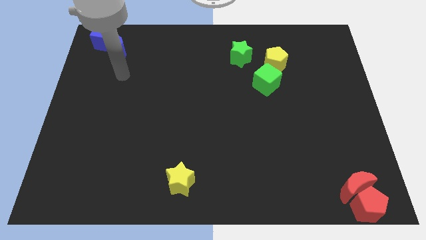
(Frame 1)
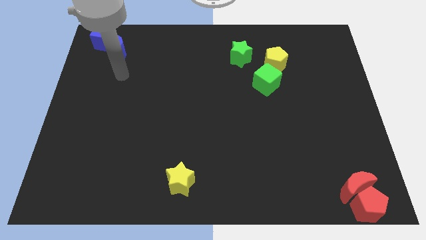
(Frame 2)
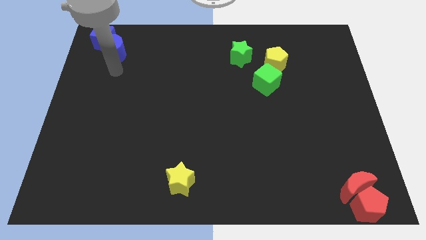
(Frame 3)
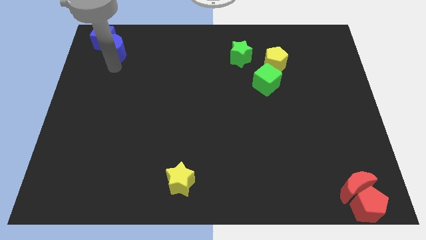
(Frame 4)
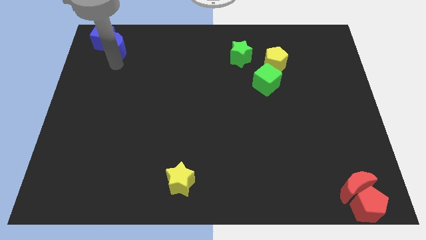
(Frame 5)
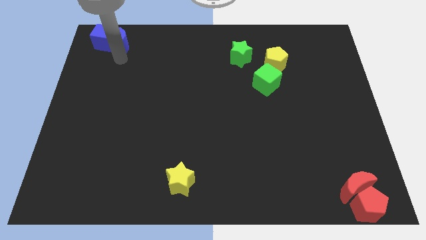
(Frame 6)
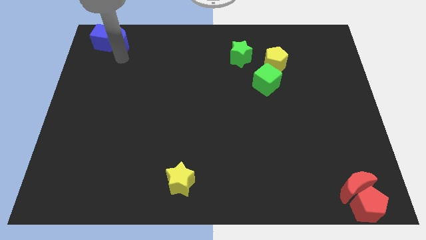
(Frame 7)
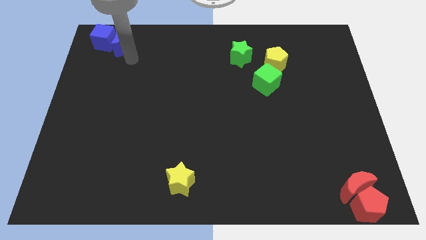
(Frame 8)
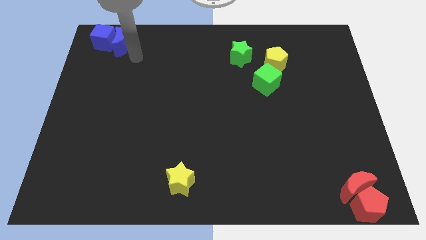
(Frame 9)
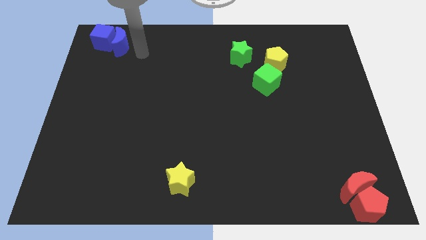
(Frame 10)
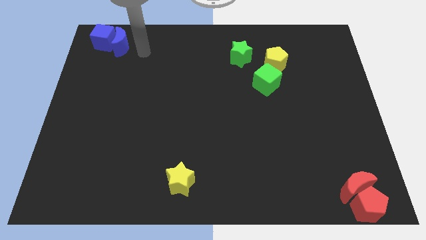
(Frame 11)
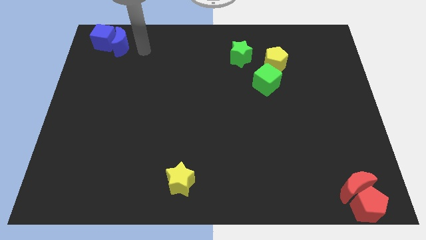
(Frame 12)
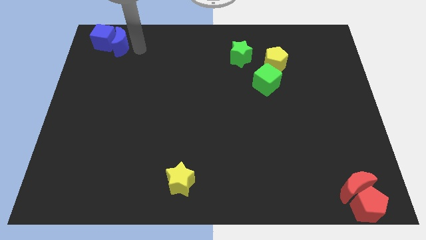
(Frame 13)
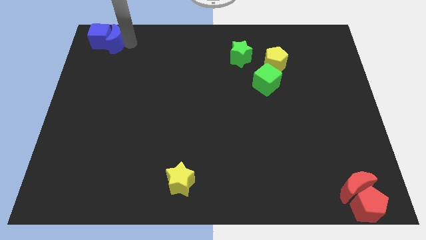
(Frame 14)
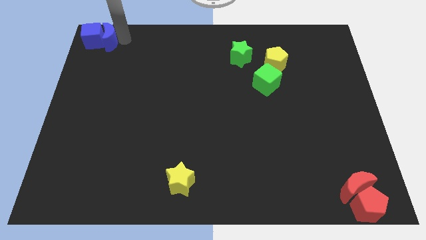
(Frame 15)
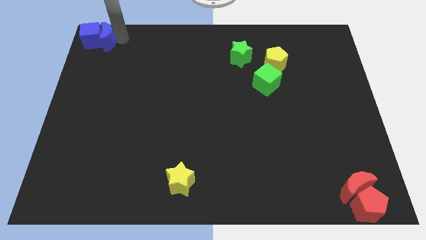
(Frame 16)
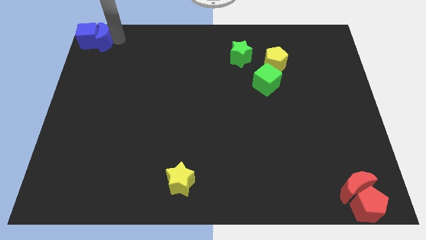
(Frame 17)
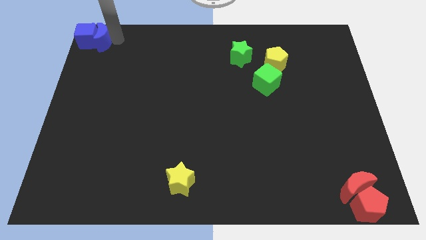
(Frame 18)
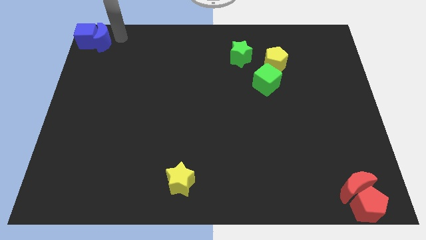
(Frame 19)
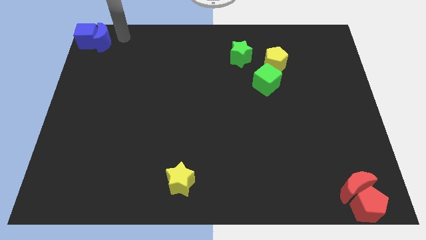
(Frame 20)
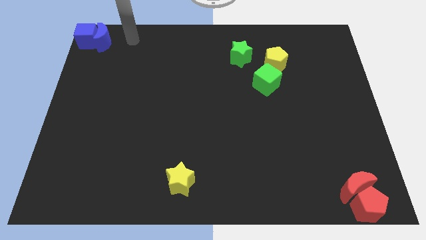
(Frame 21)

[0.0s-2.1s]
move the blue blocks to the top left of the board

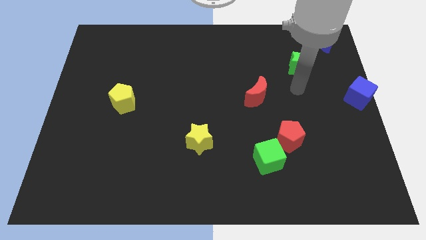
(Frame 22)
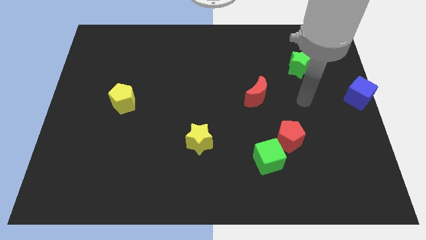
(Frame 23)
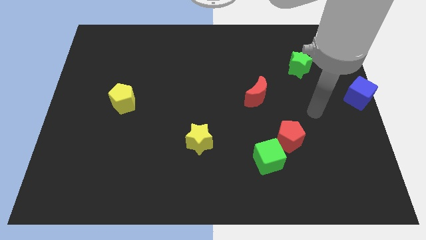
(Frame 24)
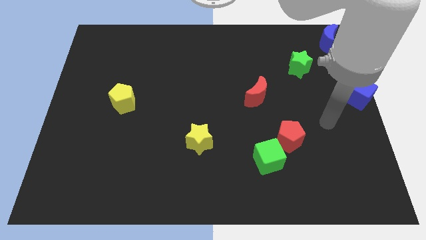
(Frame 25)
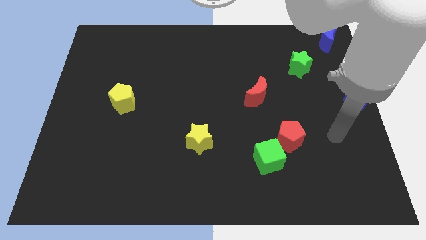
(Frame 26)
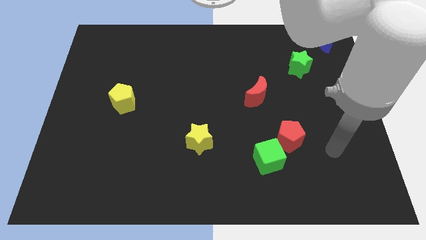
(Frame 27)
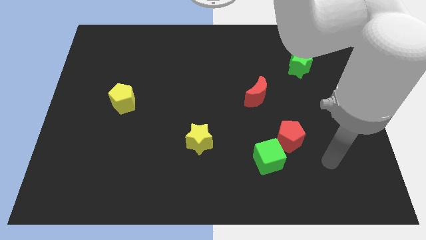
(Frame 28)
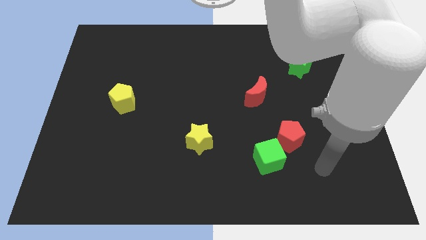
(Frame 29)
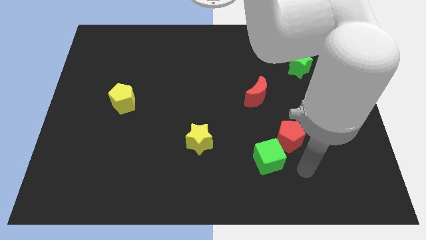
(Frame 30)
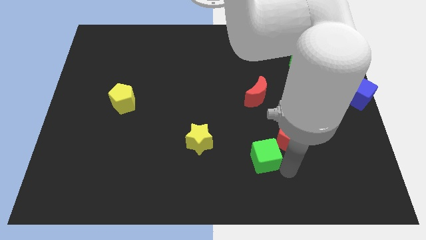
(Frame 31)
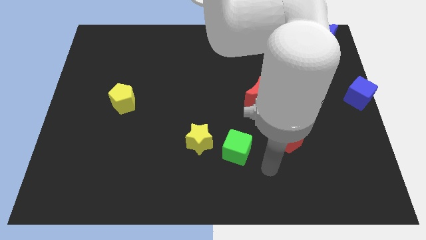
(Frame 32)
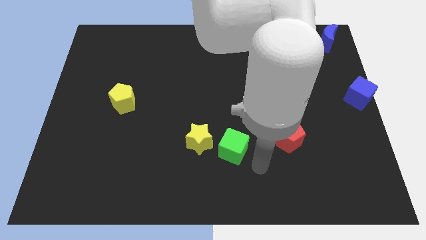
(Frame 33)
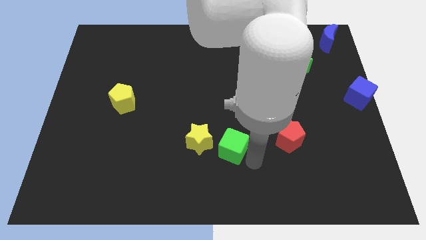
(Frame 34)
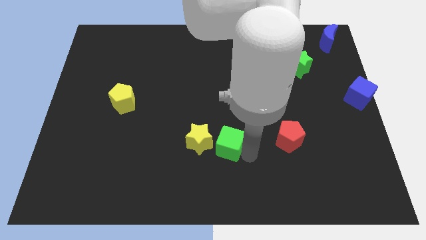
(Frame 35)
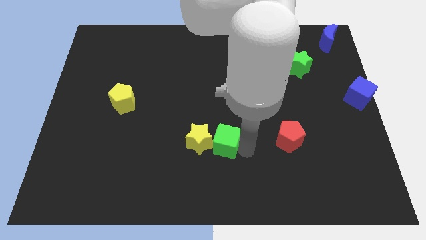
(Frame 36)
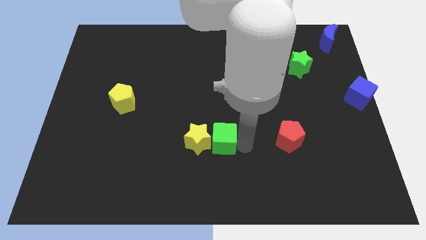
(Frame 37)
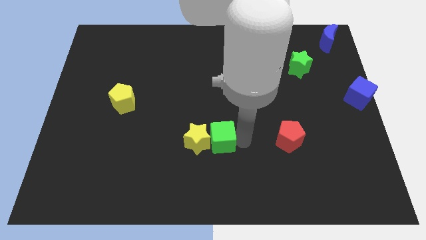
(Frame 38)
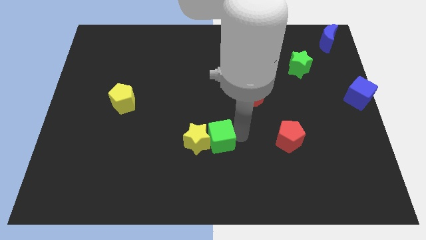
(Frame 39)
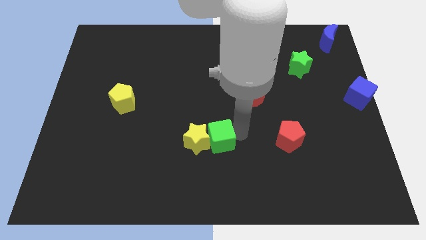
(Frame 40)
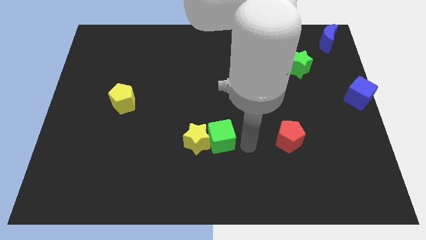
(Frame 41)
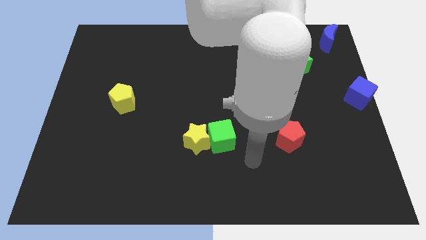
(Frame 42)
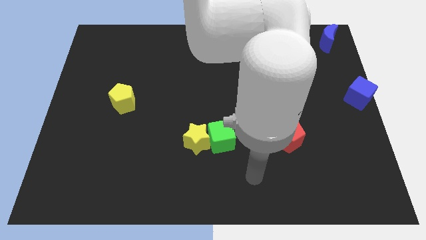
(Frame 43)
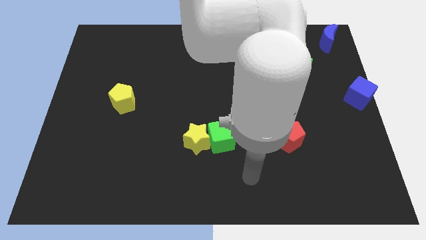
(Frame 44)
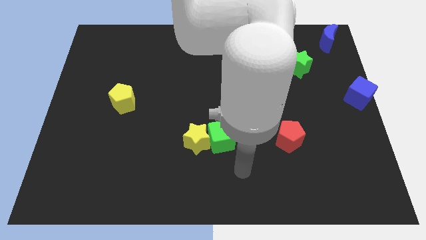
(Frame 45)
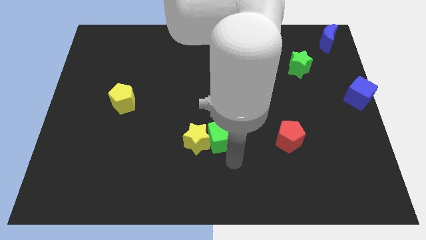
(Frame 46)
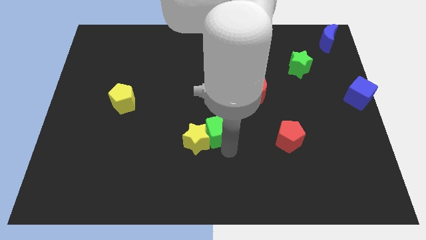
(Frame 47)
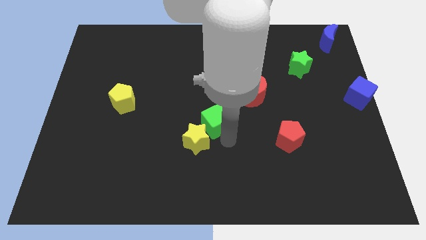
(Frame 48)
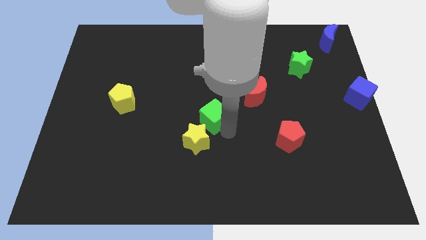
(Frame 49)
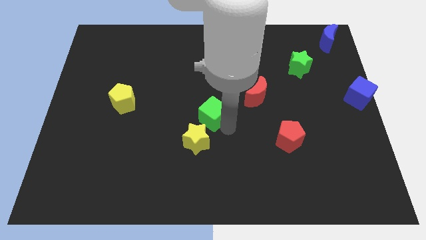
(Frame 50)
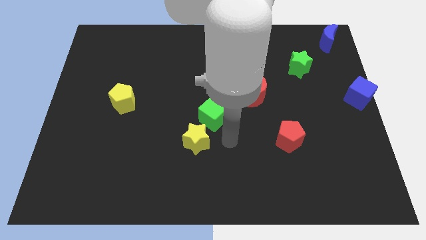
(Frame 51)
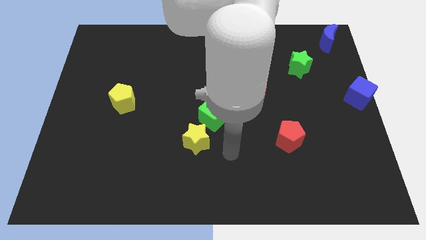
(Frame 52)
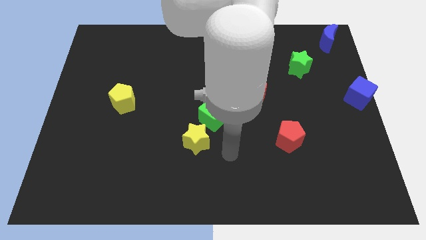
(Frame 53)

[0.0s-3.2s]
move the green cube diagonally top right to the yellow star

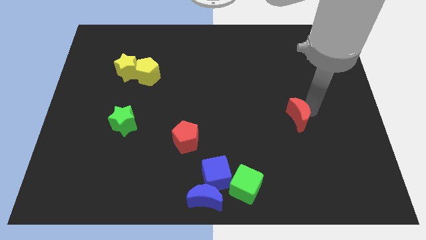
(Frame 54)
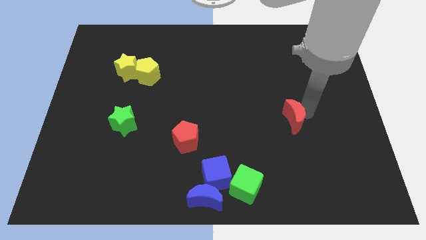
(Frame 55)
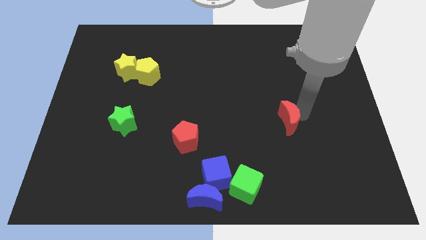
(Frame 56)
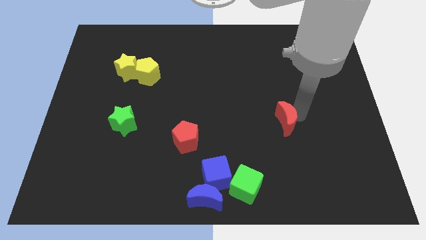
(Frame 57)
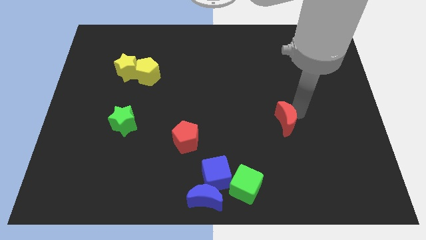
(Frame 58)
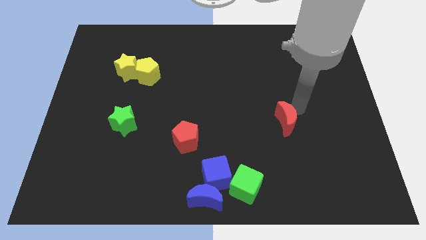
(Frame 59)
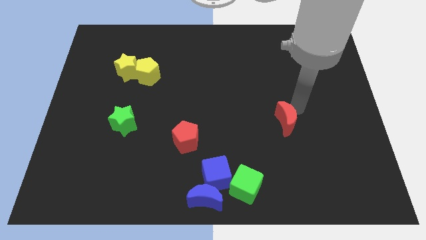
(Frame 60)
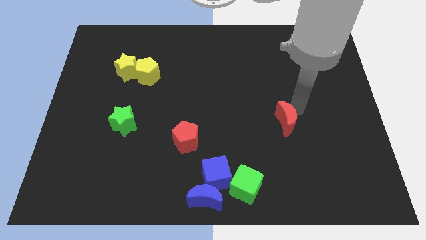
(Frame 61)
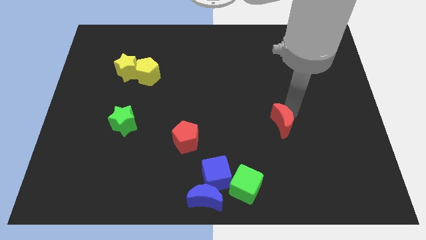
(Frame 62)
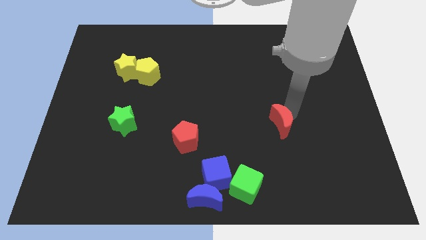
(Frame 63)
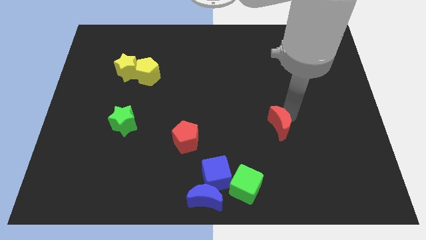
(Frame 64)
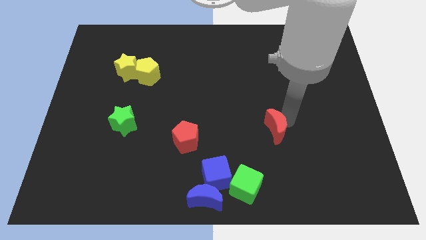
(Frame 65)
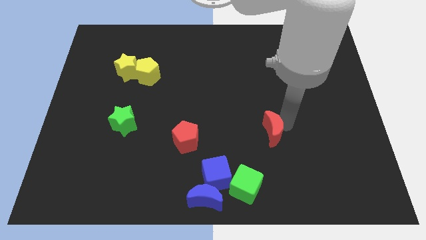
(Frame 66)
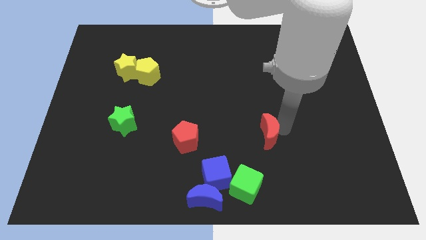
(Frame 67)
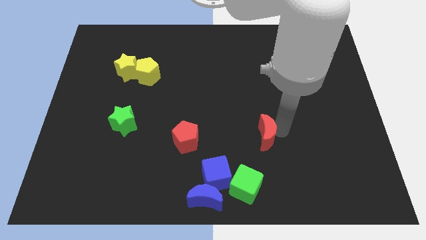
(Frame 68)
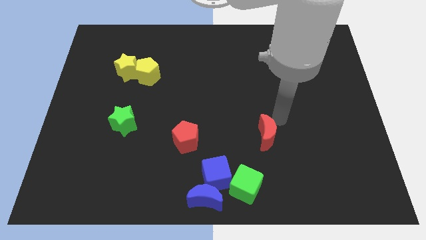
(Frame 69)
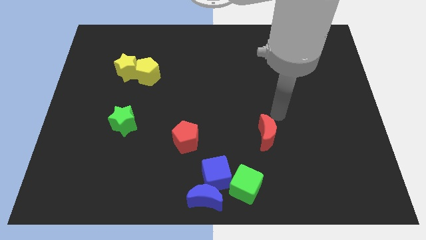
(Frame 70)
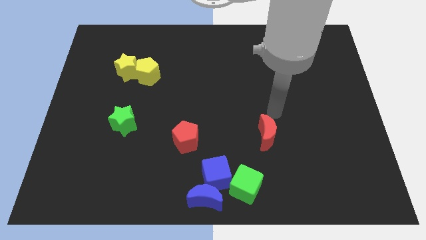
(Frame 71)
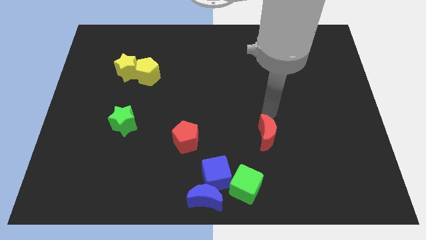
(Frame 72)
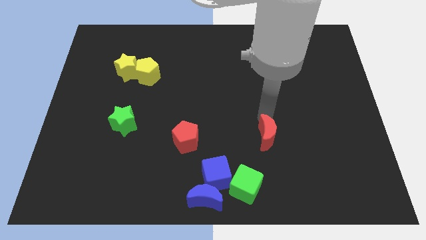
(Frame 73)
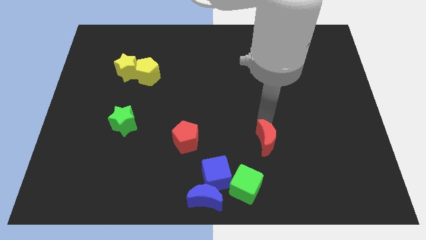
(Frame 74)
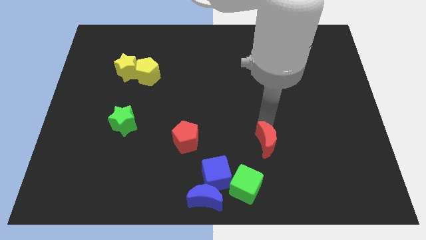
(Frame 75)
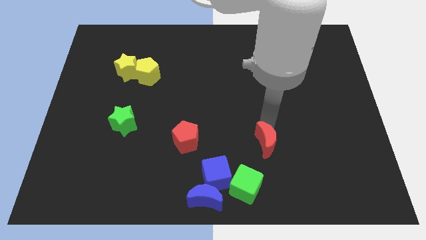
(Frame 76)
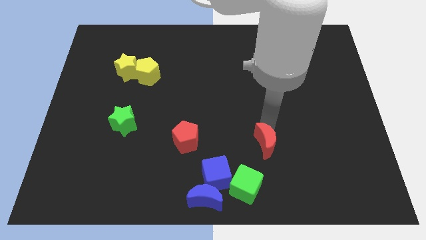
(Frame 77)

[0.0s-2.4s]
move red crescent above to the green cube

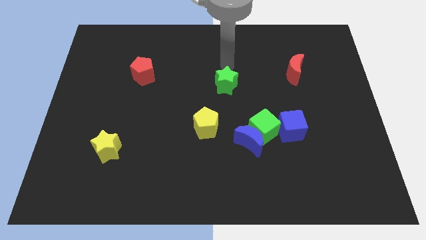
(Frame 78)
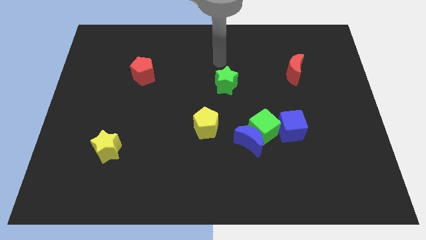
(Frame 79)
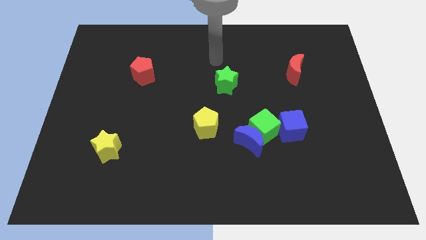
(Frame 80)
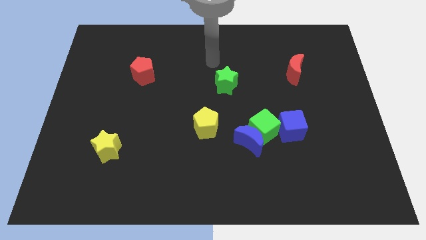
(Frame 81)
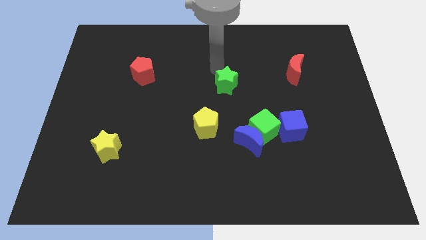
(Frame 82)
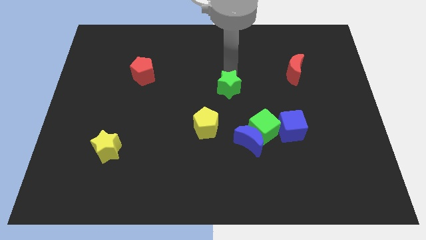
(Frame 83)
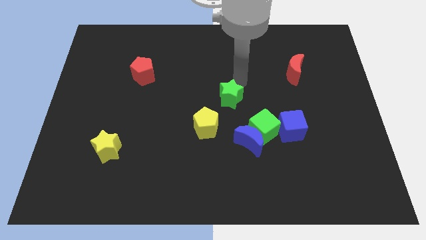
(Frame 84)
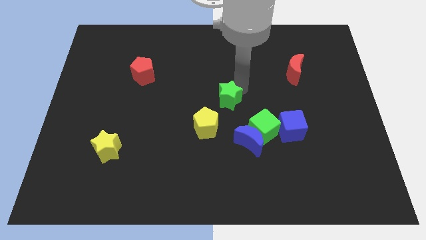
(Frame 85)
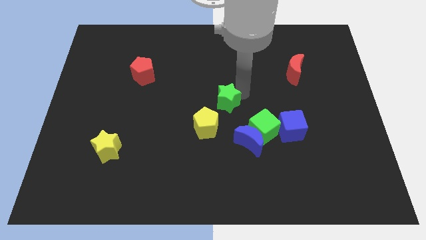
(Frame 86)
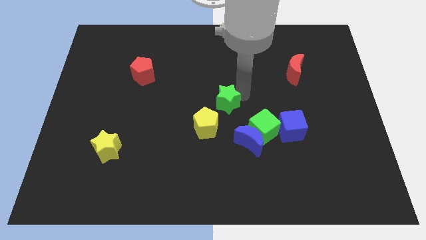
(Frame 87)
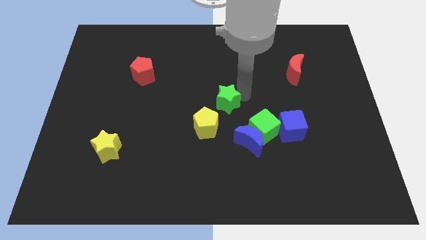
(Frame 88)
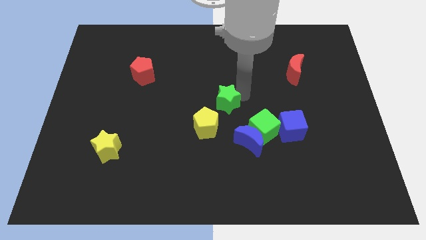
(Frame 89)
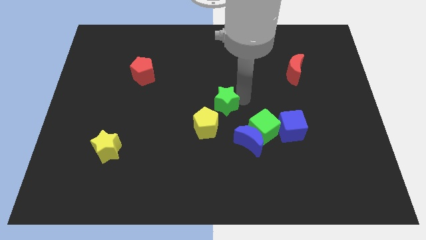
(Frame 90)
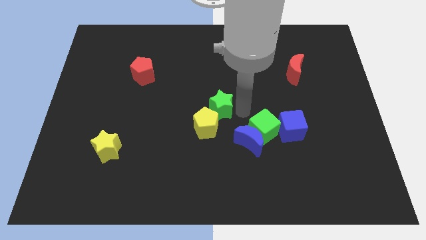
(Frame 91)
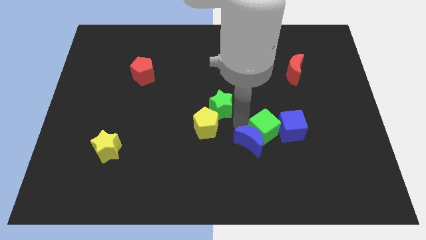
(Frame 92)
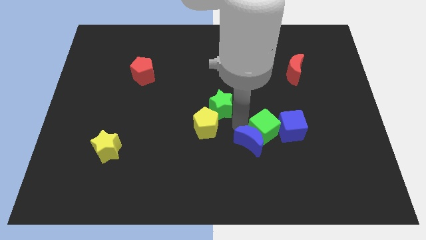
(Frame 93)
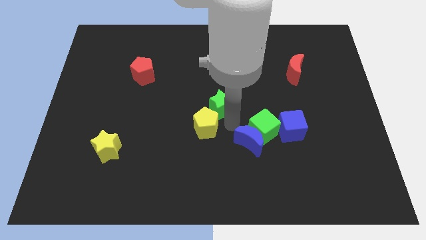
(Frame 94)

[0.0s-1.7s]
move the green star into the yellow pentagon
